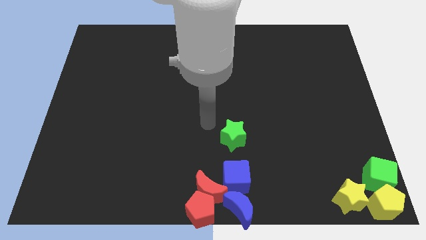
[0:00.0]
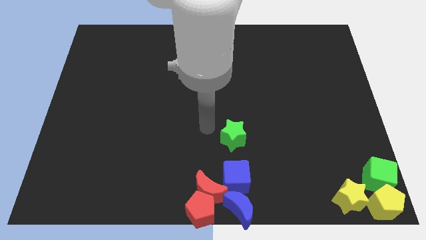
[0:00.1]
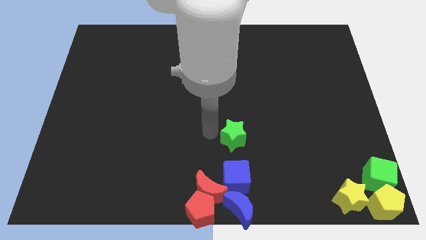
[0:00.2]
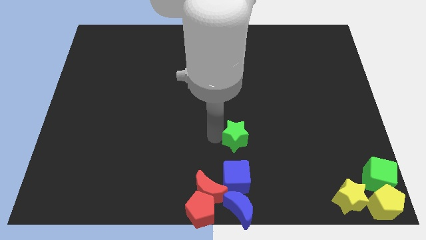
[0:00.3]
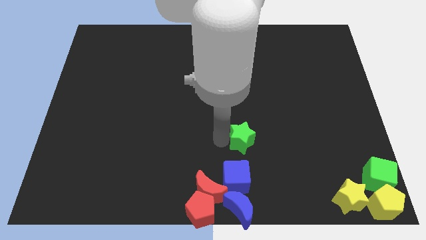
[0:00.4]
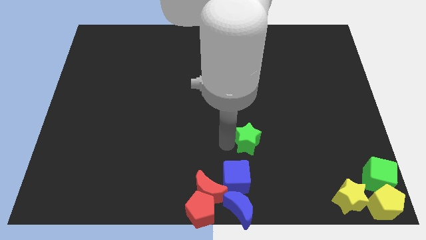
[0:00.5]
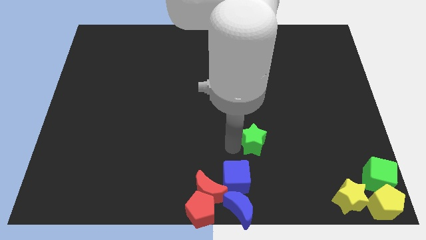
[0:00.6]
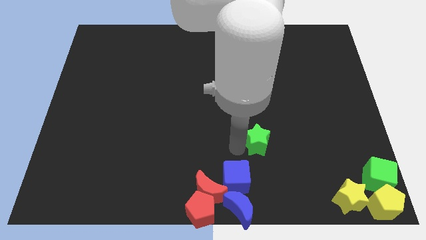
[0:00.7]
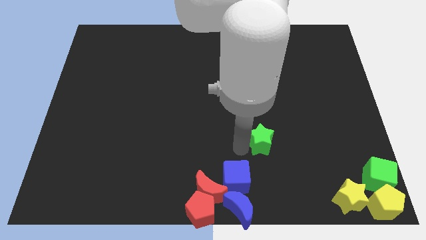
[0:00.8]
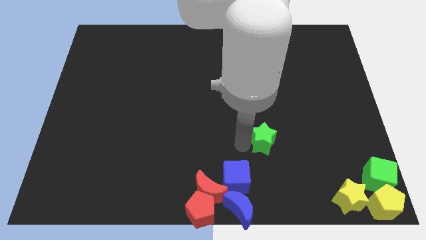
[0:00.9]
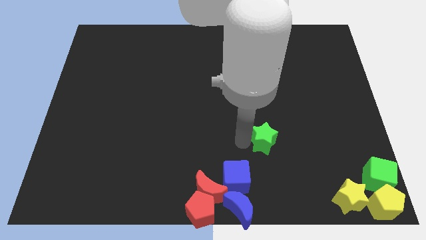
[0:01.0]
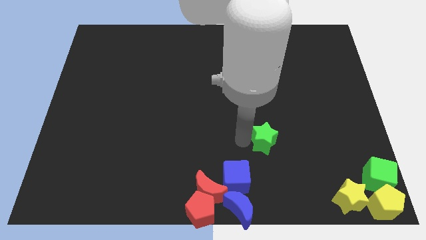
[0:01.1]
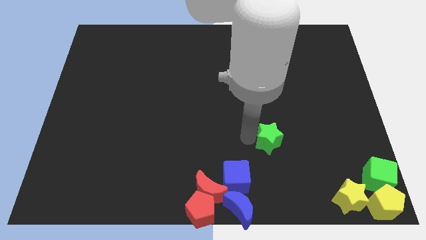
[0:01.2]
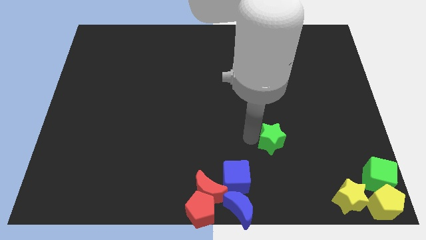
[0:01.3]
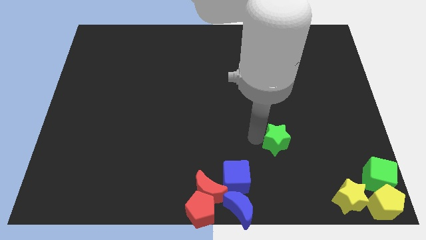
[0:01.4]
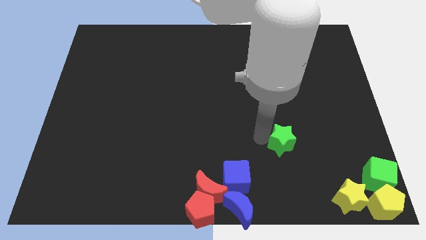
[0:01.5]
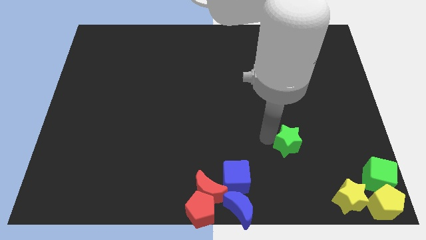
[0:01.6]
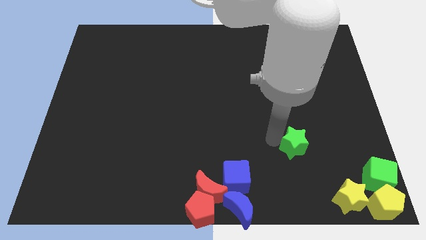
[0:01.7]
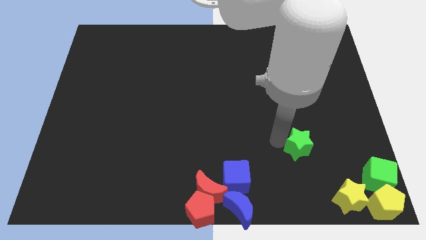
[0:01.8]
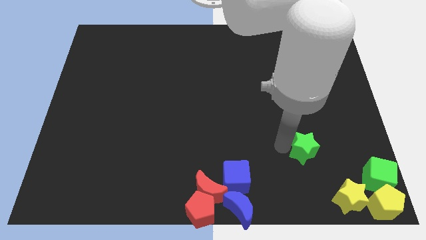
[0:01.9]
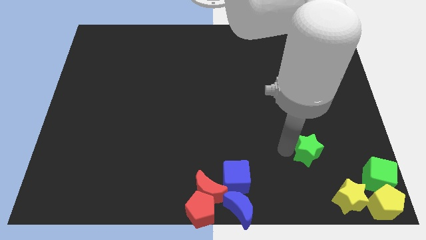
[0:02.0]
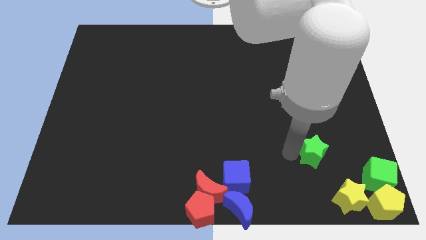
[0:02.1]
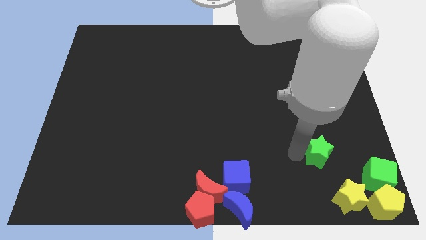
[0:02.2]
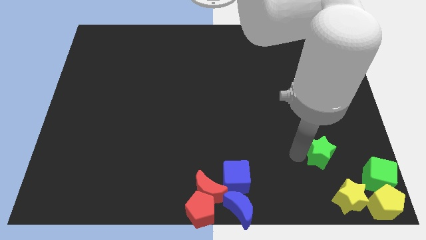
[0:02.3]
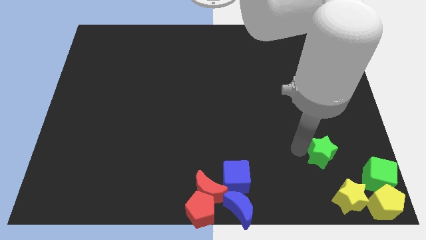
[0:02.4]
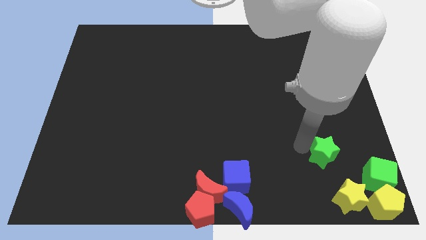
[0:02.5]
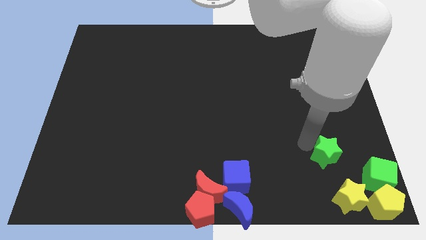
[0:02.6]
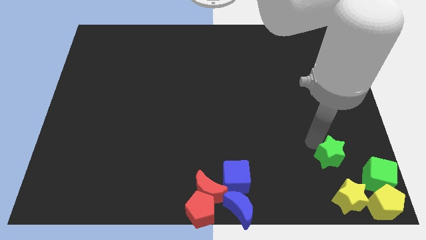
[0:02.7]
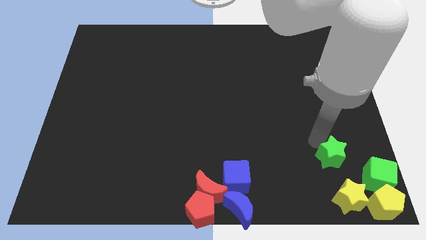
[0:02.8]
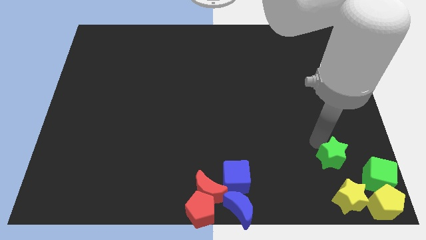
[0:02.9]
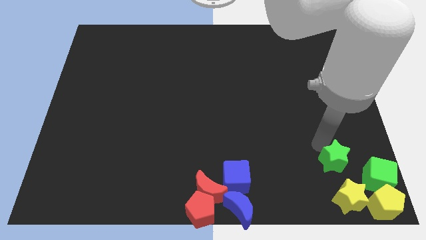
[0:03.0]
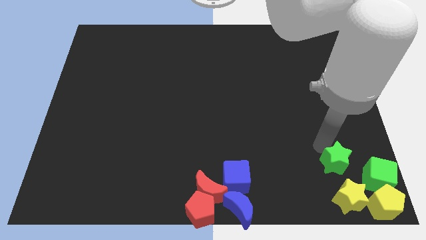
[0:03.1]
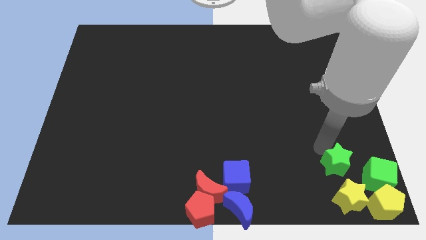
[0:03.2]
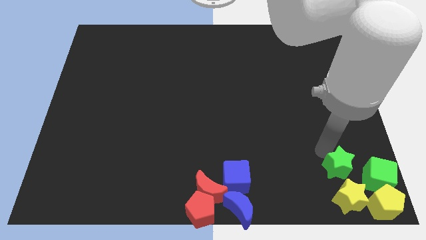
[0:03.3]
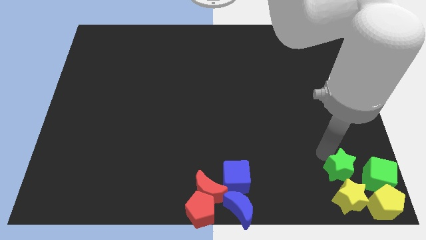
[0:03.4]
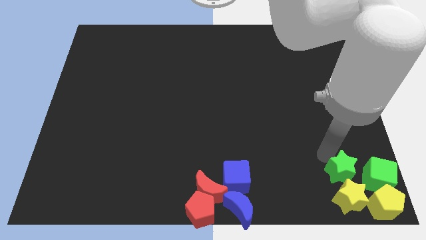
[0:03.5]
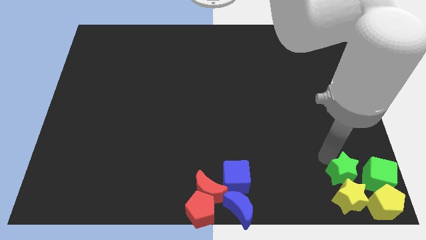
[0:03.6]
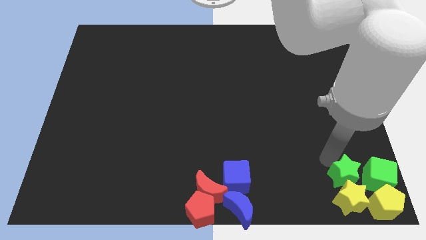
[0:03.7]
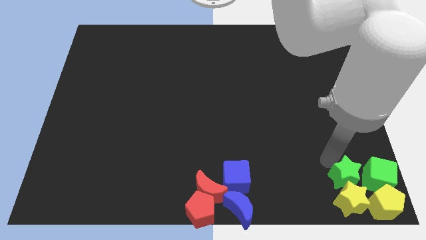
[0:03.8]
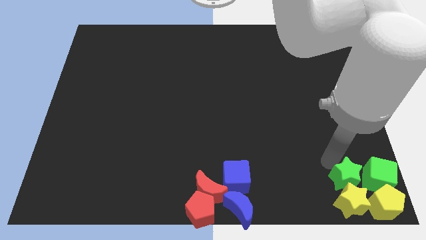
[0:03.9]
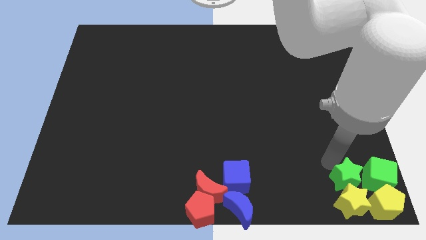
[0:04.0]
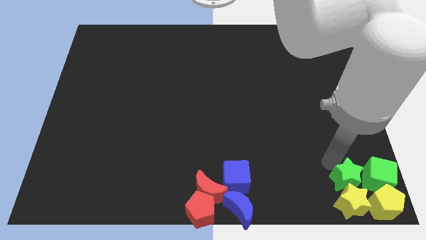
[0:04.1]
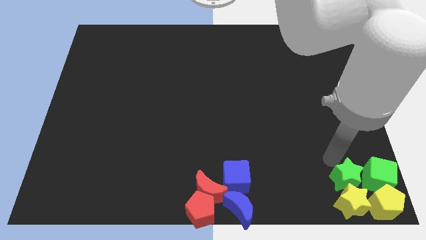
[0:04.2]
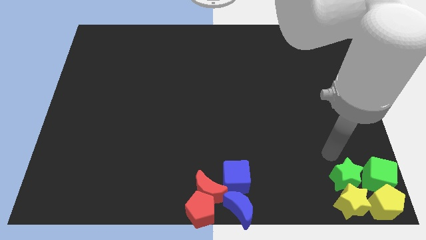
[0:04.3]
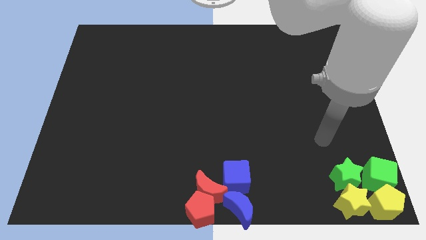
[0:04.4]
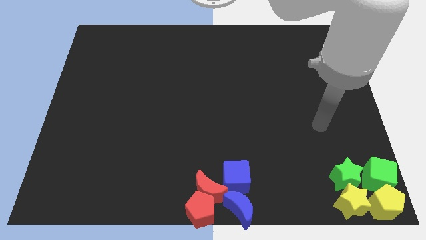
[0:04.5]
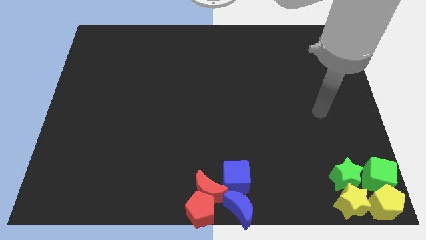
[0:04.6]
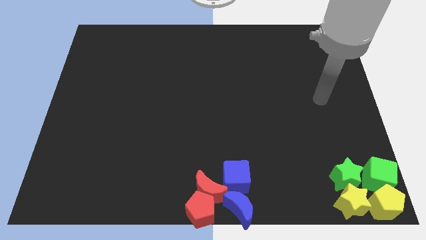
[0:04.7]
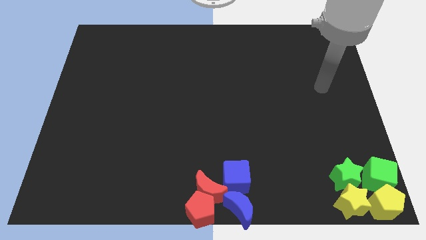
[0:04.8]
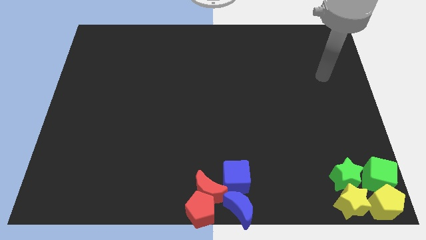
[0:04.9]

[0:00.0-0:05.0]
push the green star into the top side of the yellow star

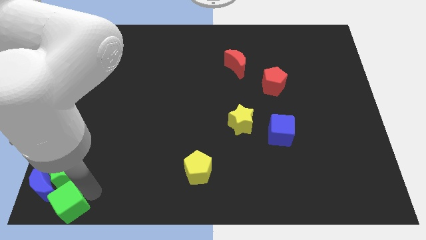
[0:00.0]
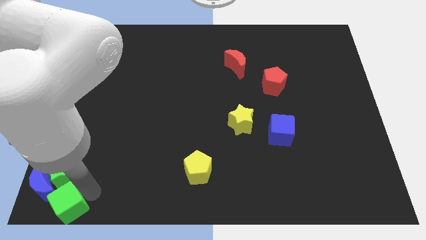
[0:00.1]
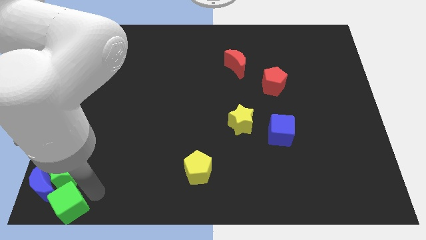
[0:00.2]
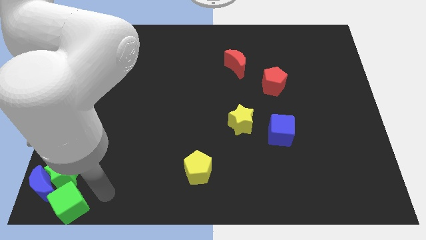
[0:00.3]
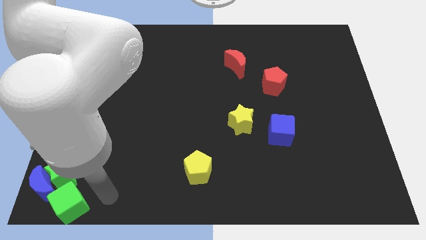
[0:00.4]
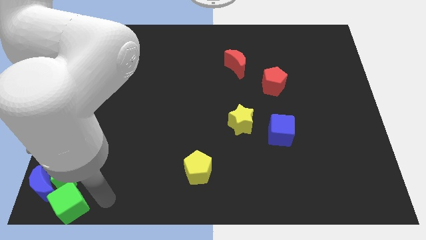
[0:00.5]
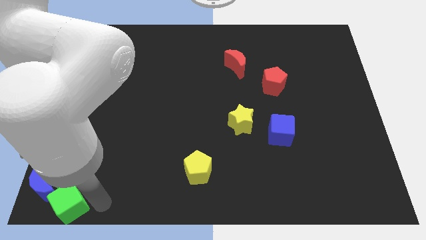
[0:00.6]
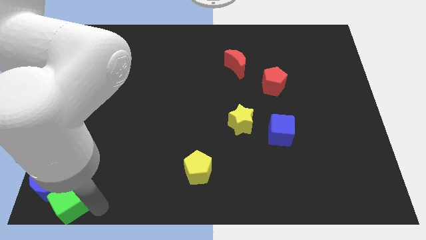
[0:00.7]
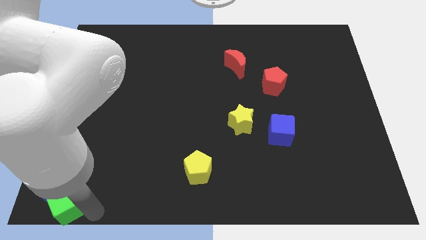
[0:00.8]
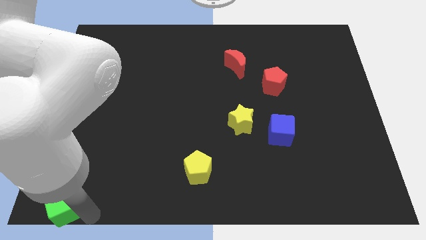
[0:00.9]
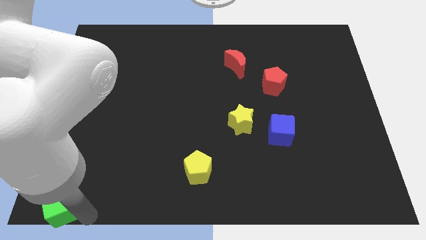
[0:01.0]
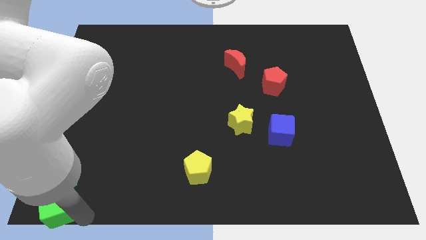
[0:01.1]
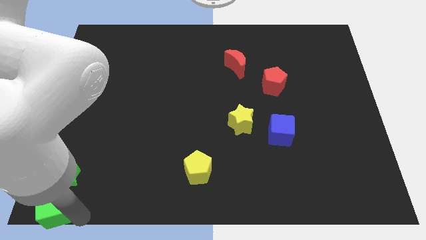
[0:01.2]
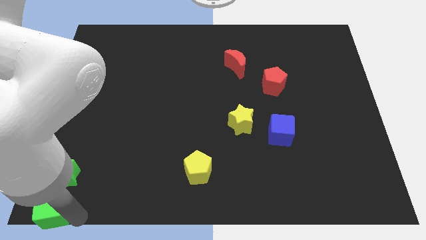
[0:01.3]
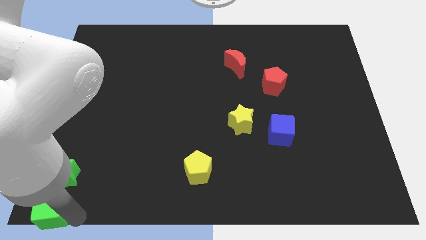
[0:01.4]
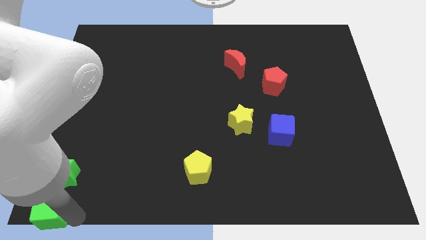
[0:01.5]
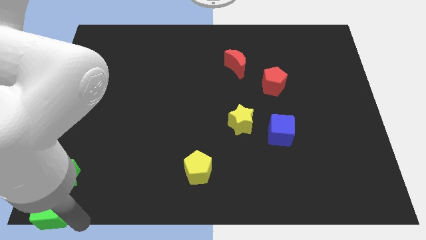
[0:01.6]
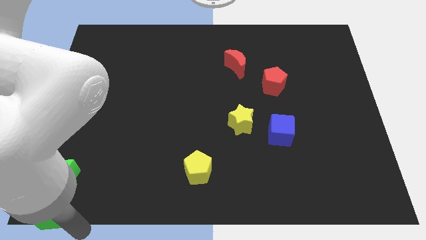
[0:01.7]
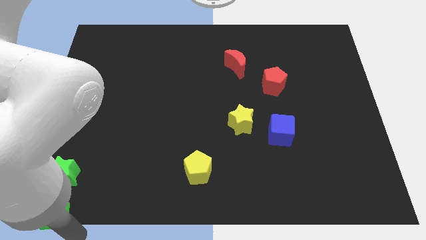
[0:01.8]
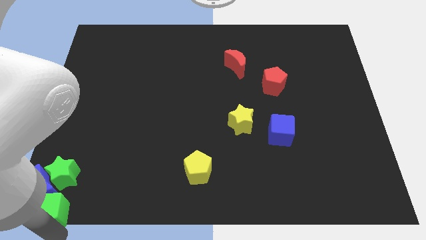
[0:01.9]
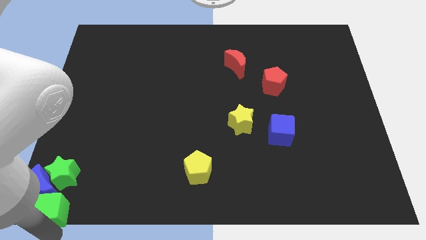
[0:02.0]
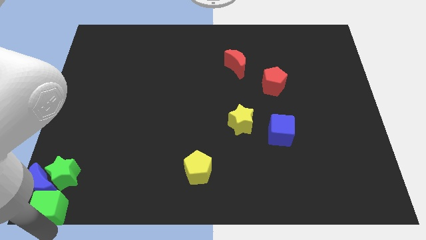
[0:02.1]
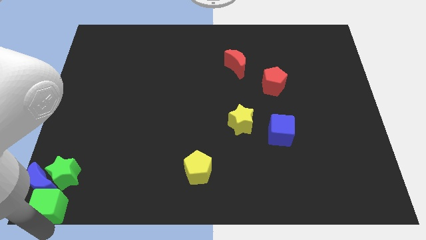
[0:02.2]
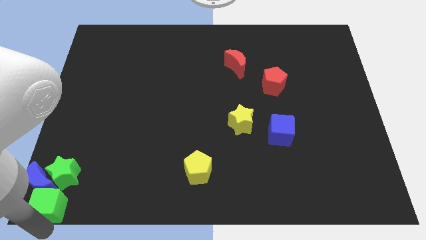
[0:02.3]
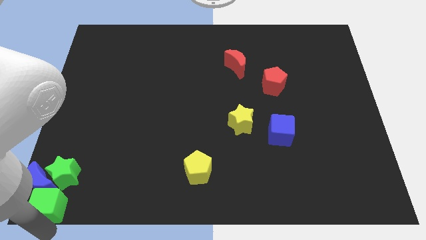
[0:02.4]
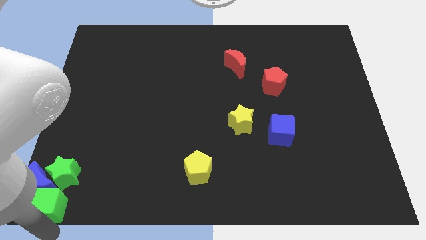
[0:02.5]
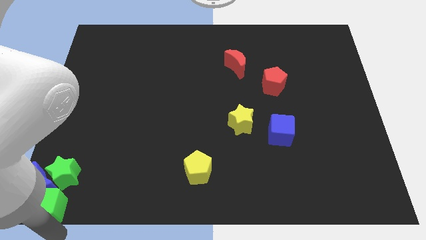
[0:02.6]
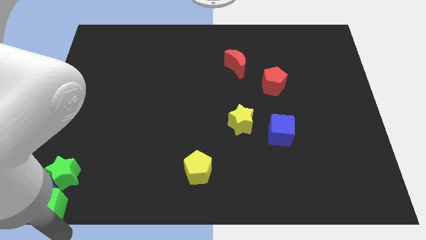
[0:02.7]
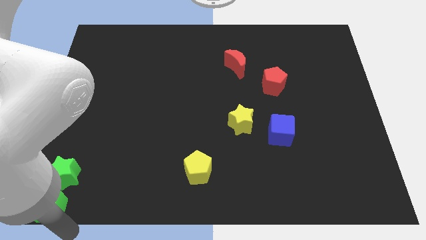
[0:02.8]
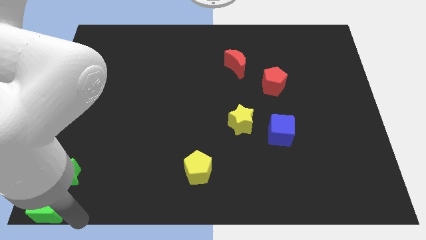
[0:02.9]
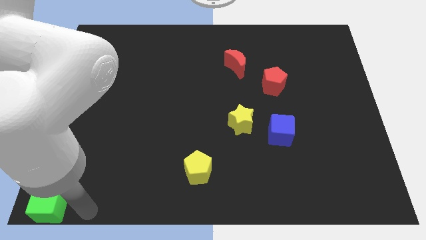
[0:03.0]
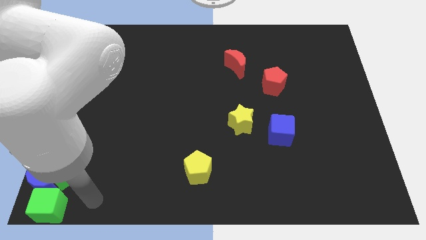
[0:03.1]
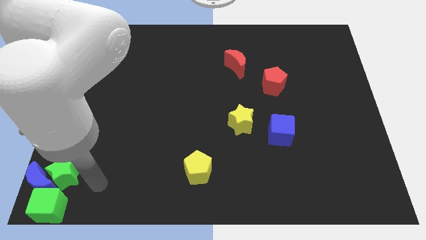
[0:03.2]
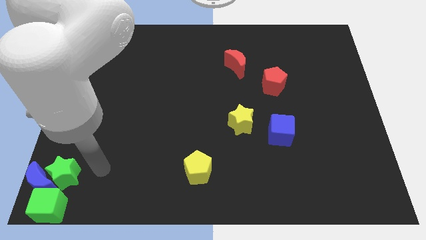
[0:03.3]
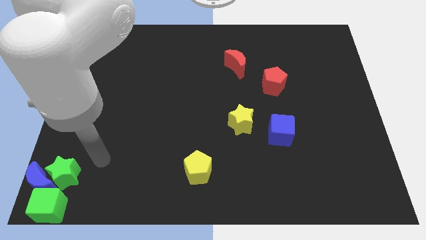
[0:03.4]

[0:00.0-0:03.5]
move the green cube at the bottom of the blue moon

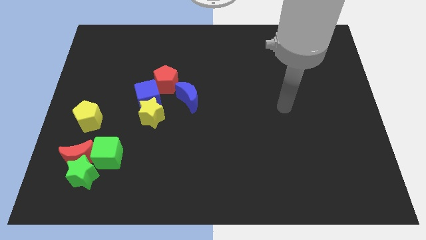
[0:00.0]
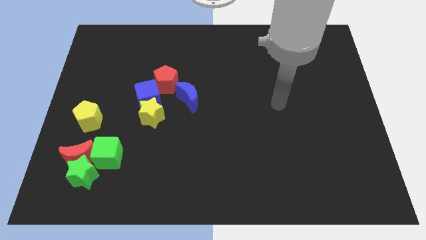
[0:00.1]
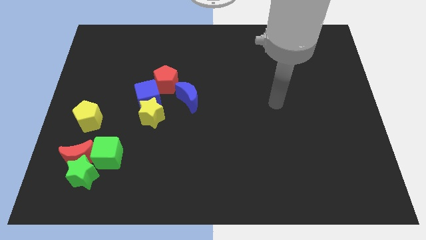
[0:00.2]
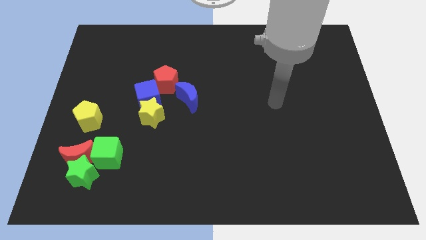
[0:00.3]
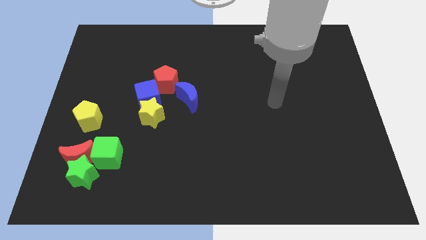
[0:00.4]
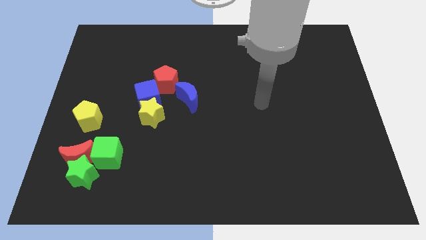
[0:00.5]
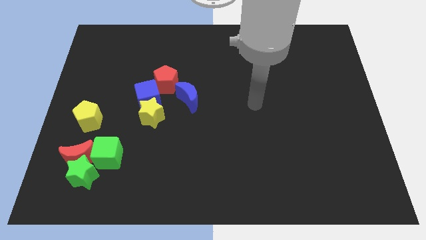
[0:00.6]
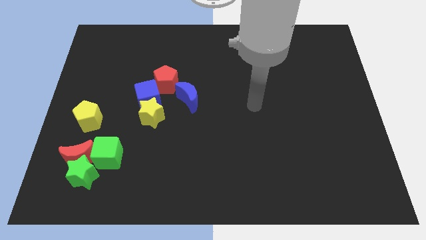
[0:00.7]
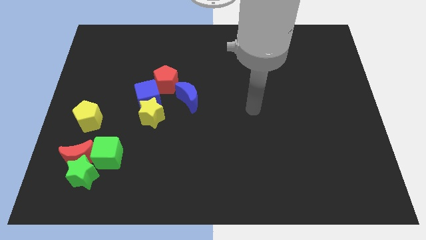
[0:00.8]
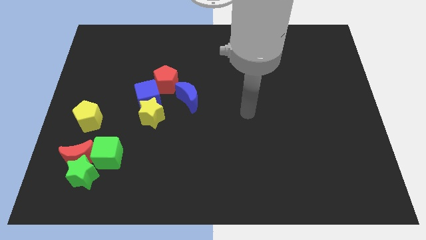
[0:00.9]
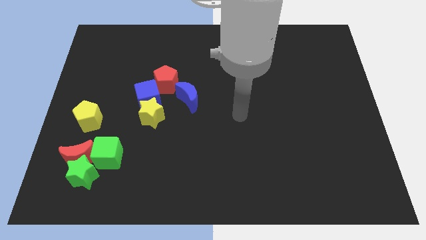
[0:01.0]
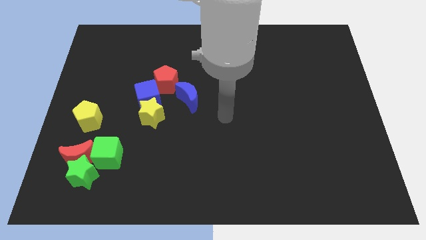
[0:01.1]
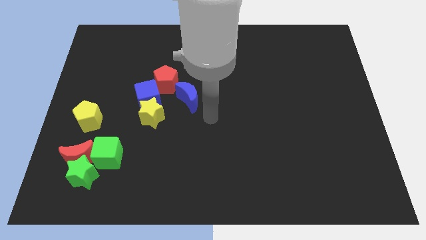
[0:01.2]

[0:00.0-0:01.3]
move your arm to the center of the board
